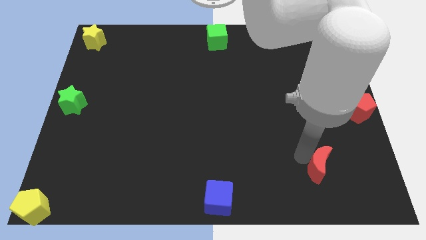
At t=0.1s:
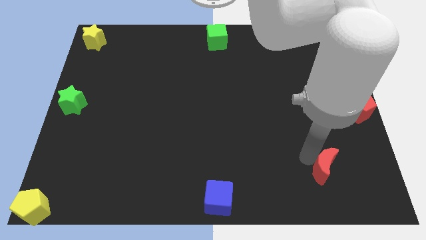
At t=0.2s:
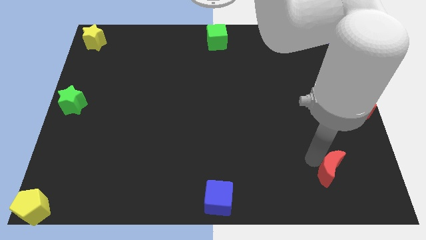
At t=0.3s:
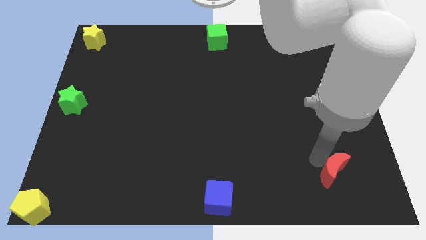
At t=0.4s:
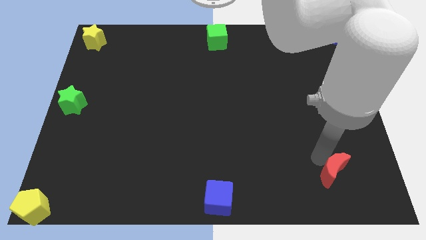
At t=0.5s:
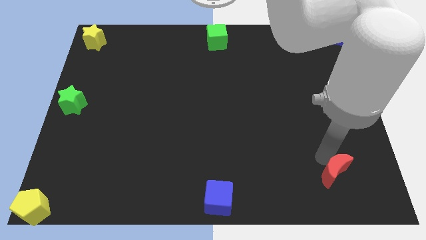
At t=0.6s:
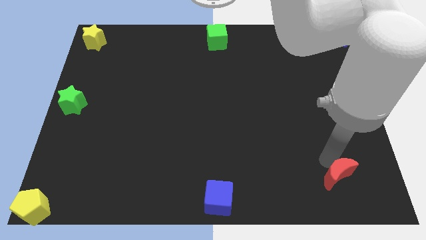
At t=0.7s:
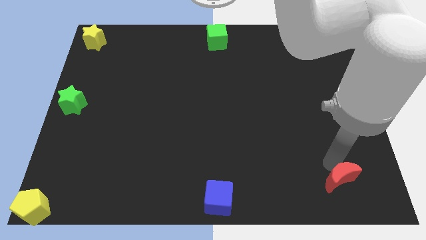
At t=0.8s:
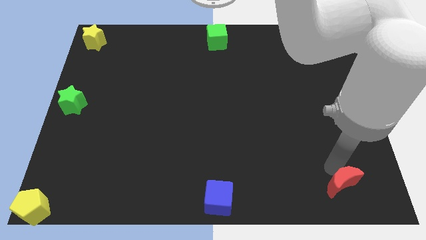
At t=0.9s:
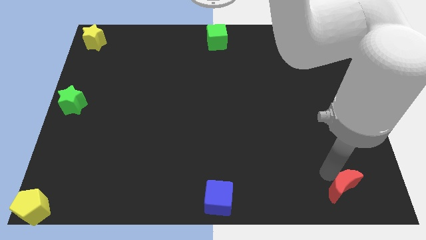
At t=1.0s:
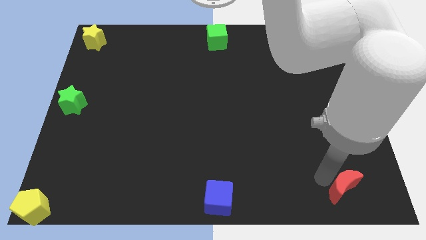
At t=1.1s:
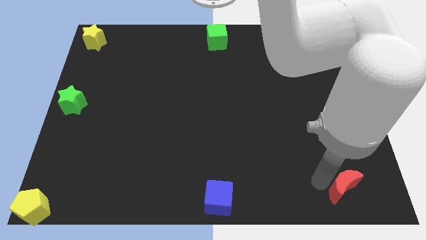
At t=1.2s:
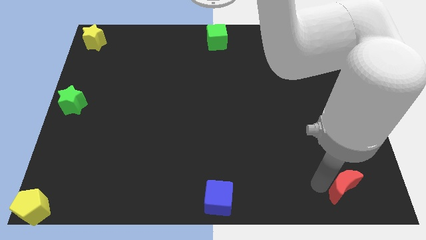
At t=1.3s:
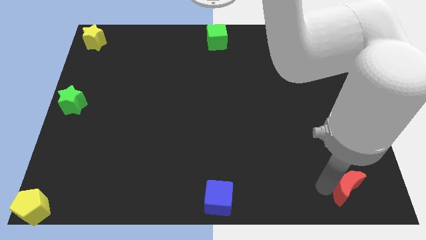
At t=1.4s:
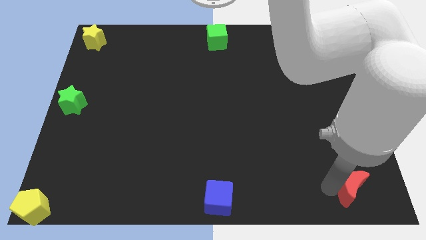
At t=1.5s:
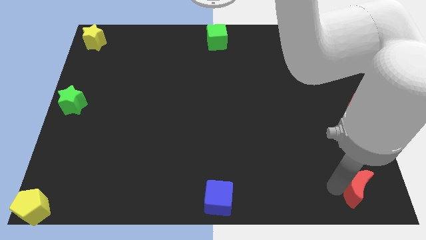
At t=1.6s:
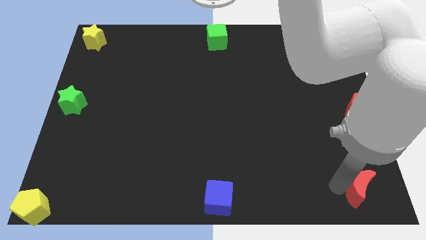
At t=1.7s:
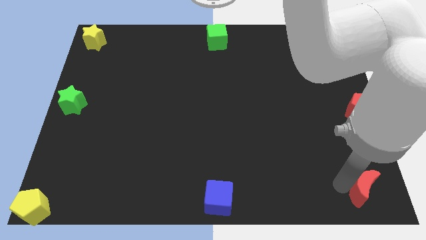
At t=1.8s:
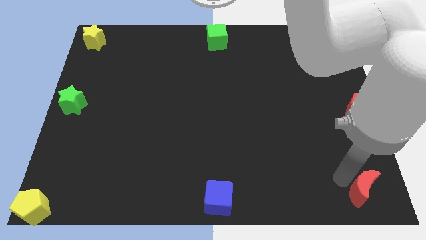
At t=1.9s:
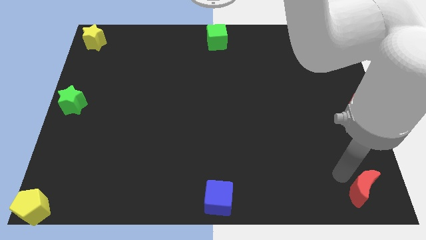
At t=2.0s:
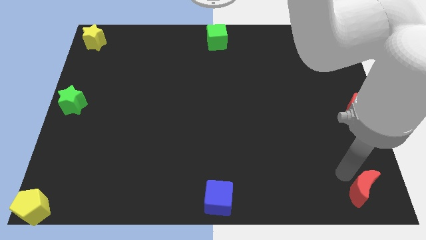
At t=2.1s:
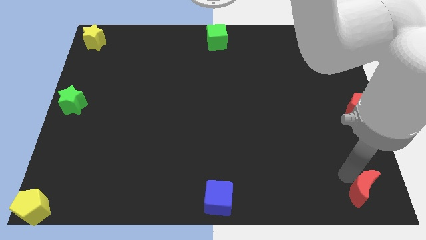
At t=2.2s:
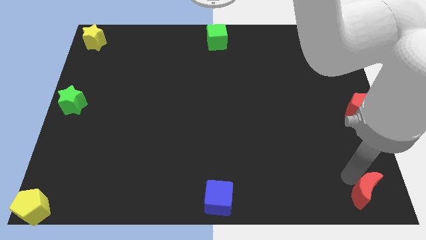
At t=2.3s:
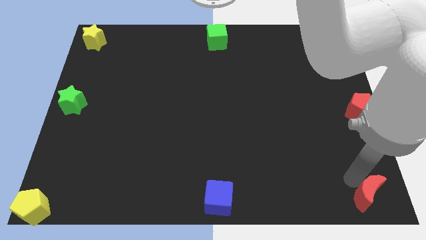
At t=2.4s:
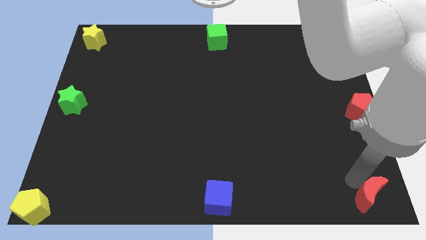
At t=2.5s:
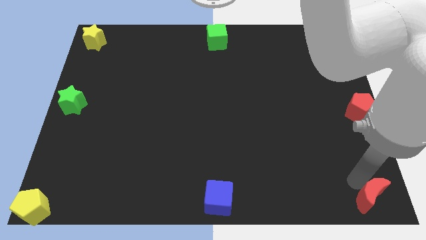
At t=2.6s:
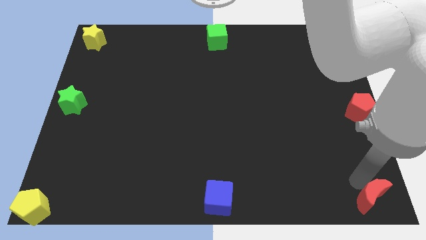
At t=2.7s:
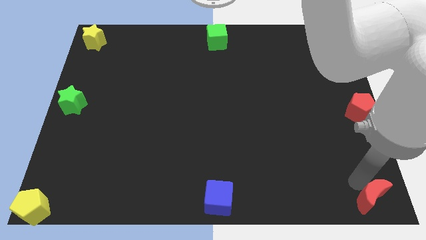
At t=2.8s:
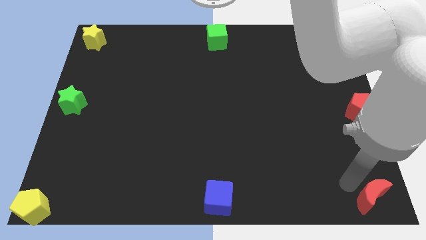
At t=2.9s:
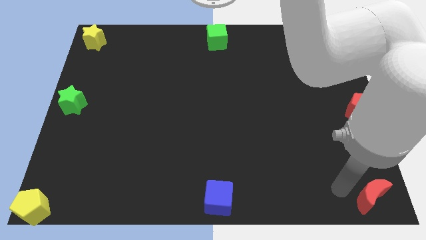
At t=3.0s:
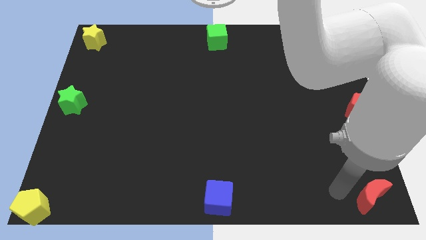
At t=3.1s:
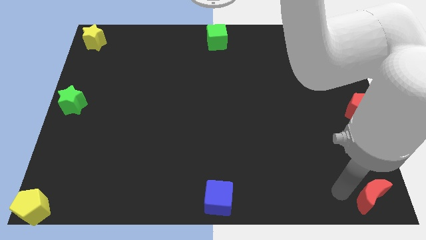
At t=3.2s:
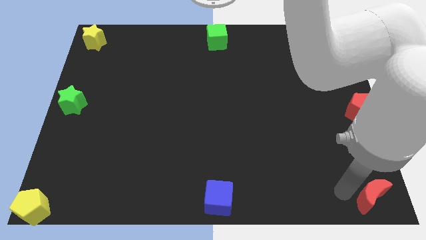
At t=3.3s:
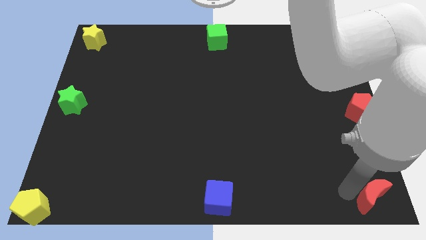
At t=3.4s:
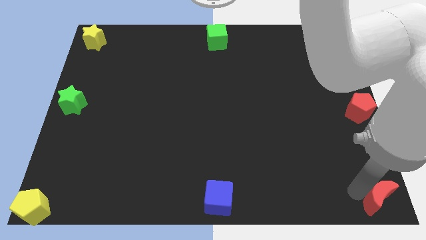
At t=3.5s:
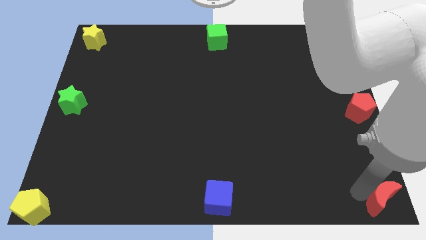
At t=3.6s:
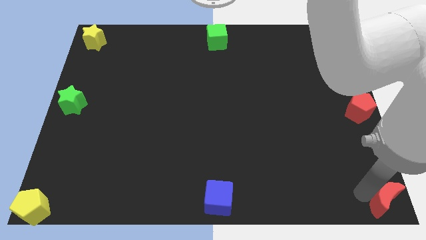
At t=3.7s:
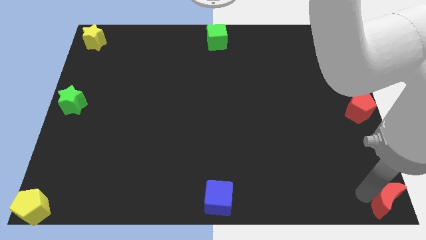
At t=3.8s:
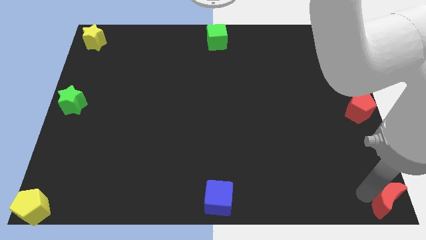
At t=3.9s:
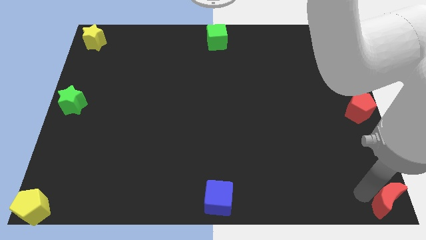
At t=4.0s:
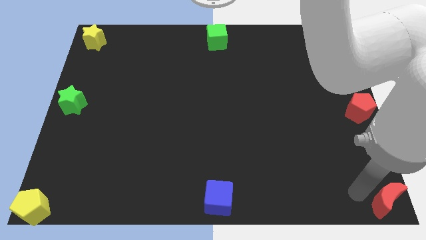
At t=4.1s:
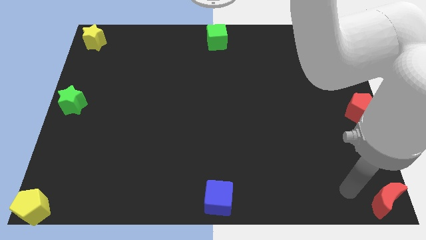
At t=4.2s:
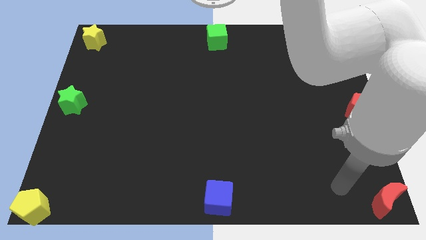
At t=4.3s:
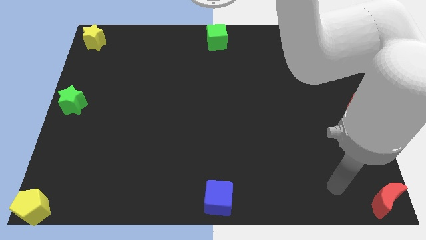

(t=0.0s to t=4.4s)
push the red moon to the bottom right corner of the board

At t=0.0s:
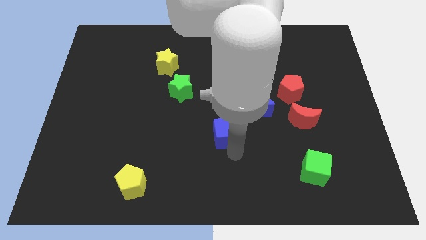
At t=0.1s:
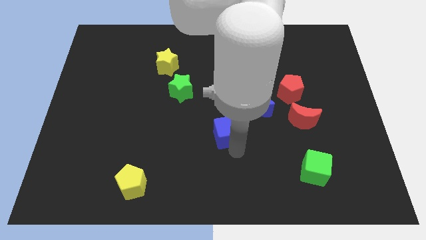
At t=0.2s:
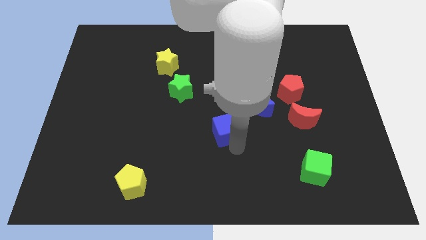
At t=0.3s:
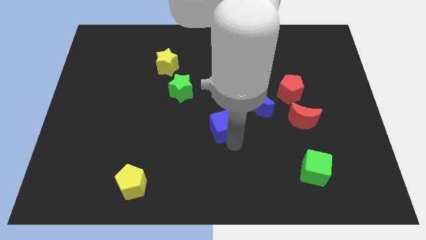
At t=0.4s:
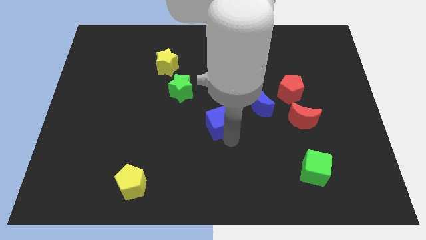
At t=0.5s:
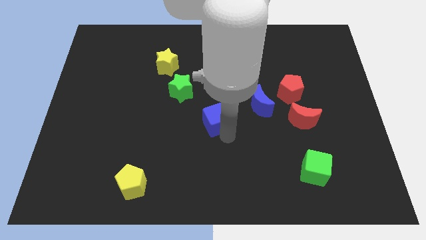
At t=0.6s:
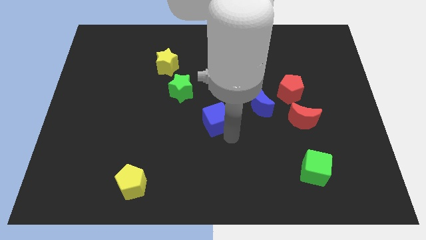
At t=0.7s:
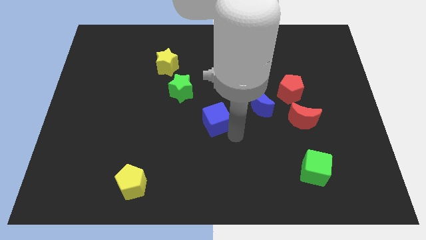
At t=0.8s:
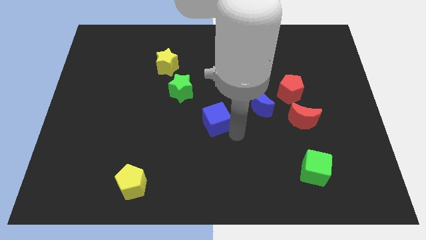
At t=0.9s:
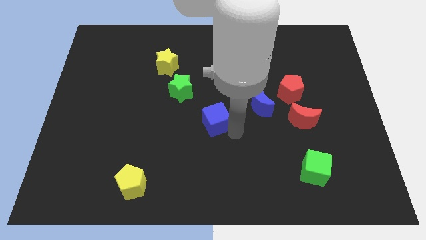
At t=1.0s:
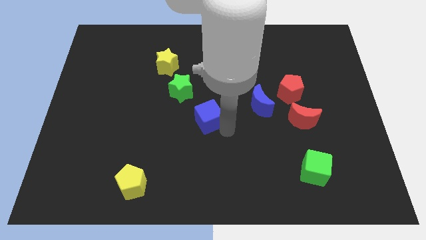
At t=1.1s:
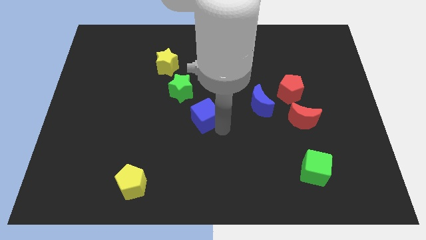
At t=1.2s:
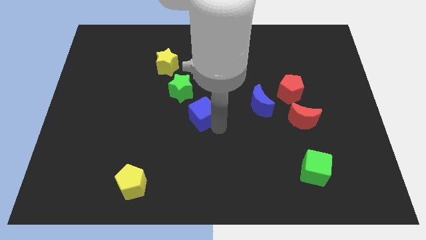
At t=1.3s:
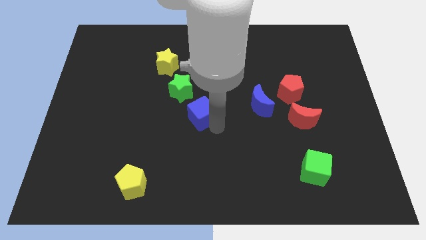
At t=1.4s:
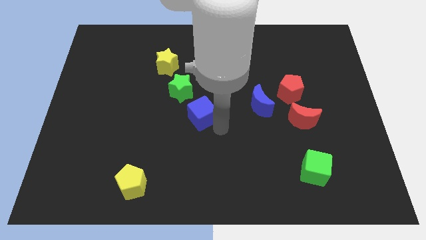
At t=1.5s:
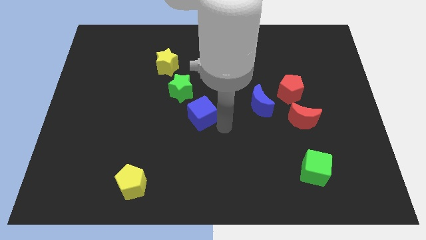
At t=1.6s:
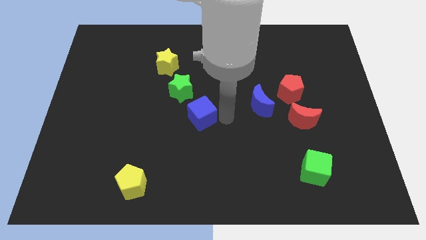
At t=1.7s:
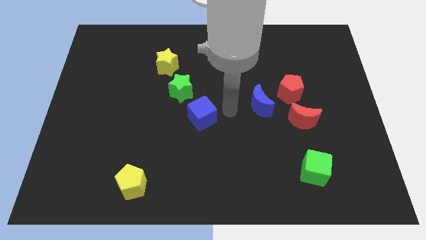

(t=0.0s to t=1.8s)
push the blue cube to the diagonal line of the green and yellow stars

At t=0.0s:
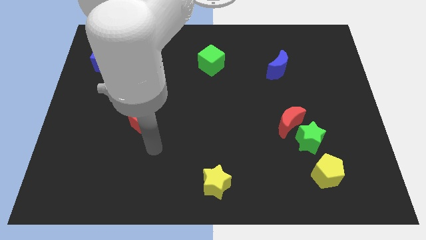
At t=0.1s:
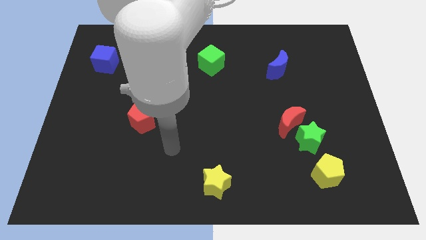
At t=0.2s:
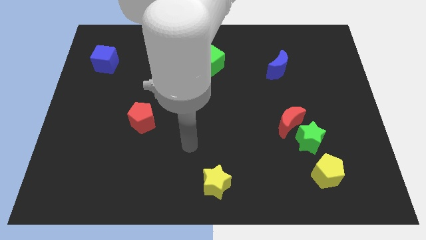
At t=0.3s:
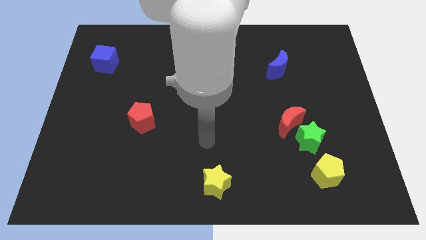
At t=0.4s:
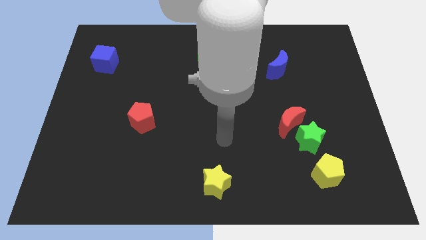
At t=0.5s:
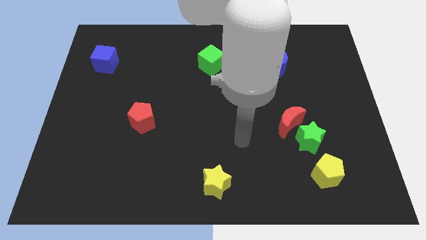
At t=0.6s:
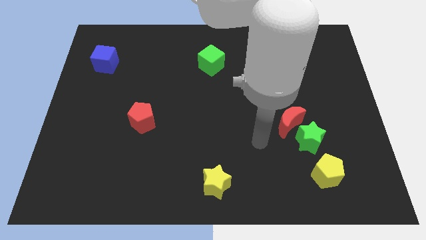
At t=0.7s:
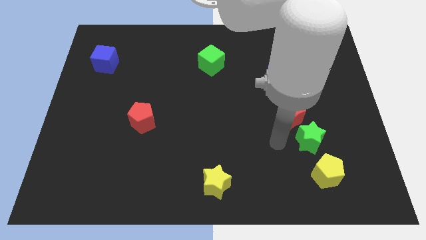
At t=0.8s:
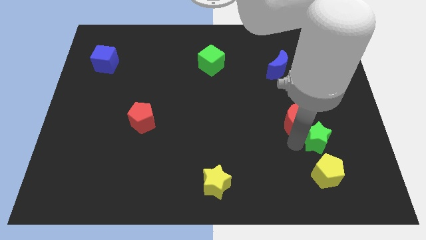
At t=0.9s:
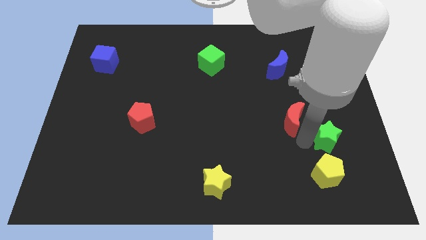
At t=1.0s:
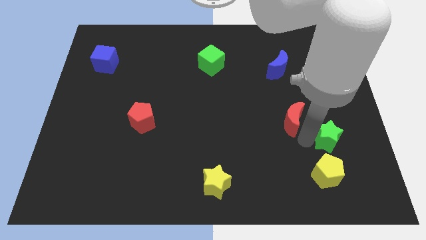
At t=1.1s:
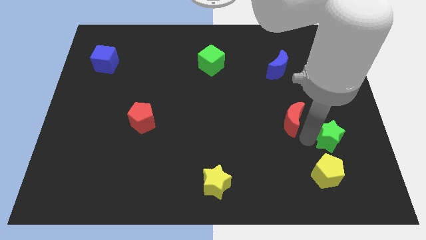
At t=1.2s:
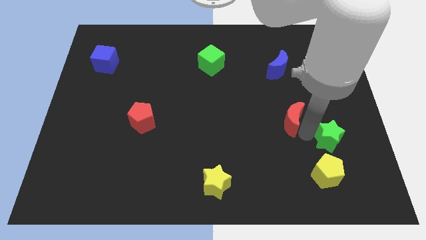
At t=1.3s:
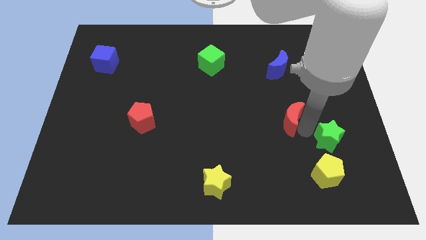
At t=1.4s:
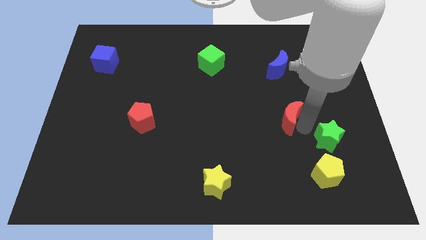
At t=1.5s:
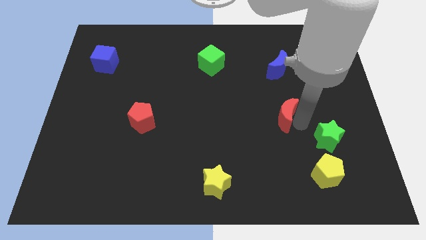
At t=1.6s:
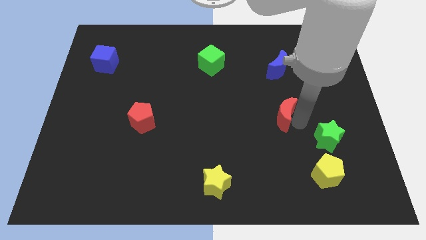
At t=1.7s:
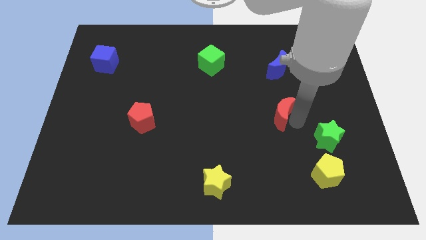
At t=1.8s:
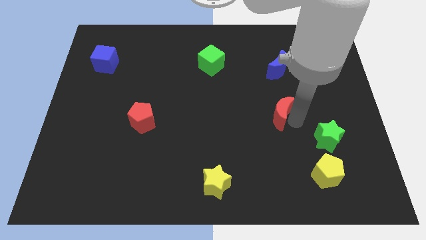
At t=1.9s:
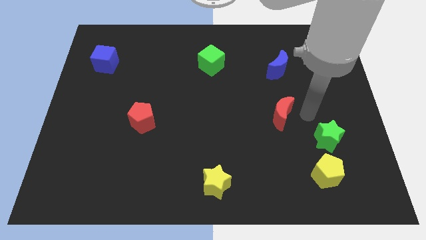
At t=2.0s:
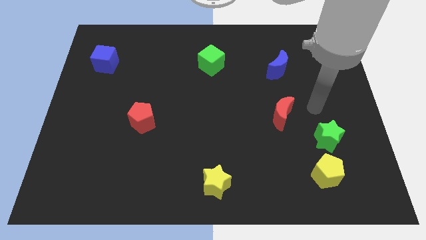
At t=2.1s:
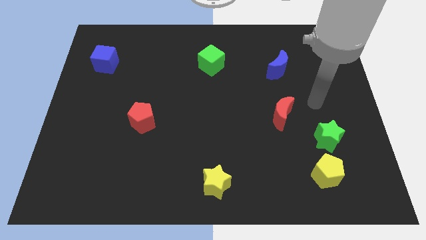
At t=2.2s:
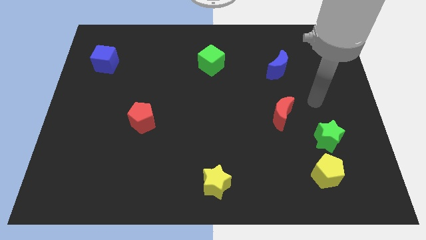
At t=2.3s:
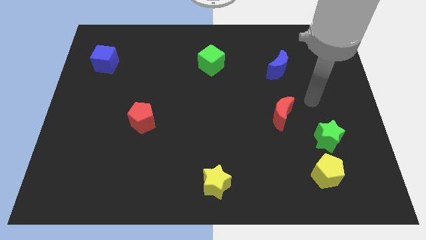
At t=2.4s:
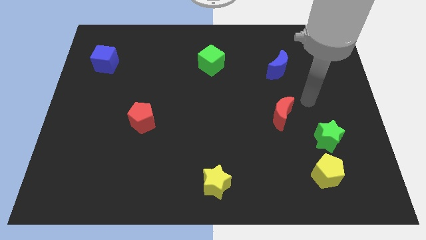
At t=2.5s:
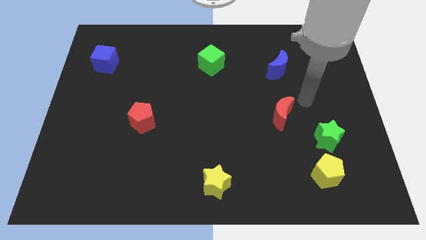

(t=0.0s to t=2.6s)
adjust the green star and the red moon to form a triangle

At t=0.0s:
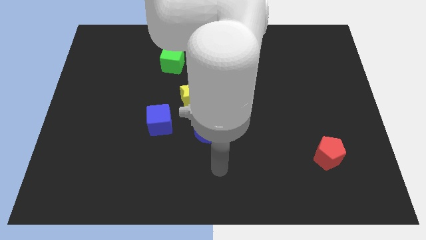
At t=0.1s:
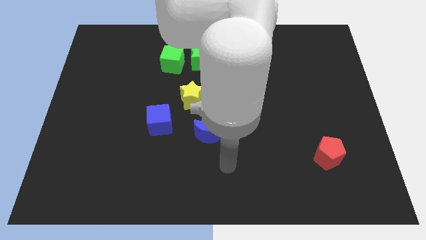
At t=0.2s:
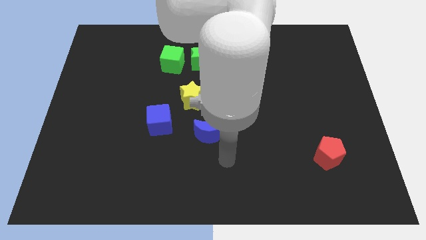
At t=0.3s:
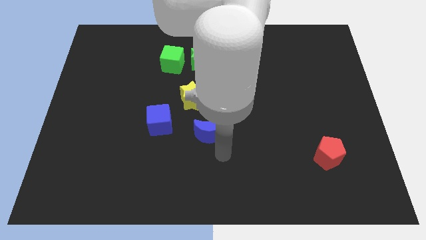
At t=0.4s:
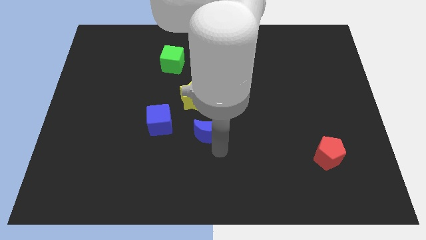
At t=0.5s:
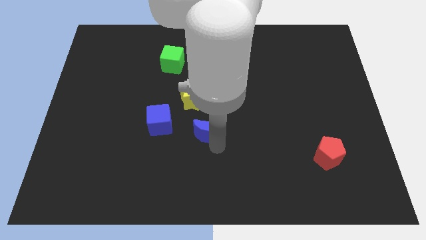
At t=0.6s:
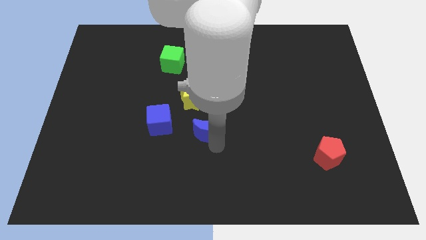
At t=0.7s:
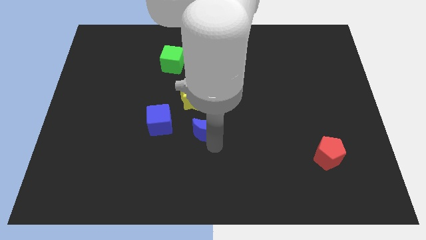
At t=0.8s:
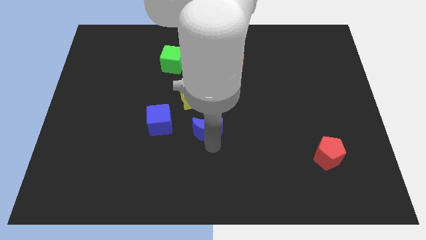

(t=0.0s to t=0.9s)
push the blue moon to the center
